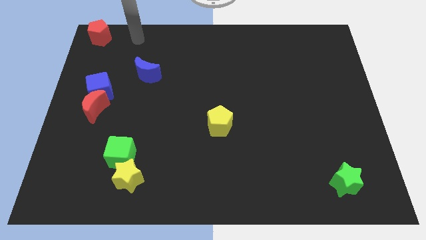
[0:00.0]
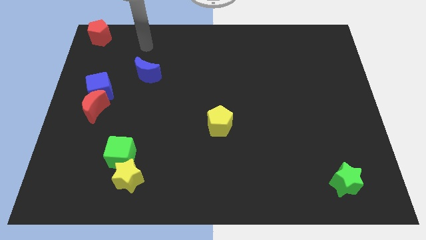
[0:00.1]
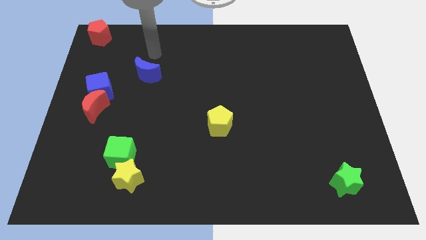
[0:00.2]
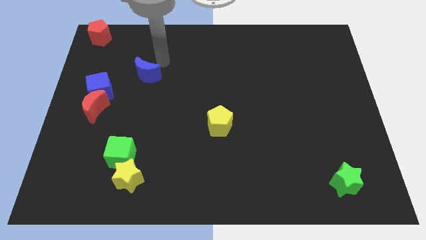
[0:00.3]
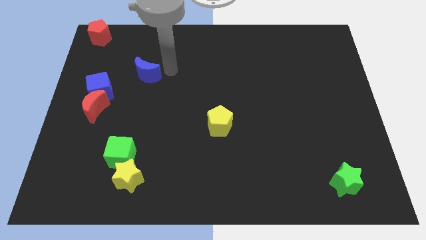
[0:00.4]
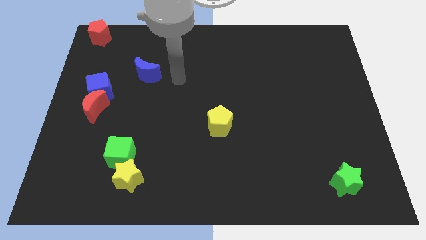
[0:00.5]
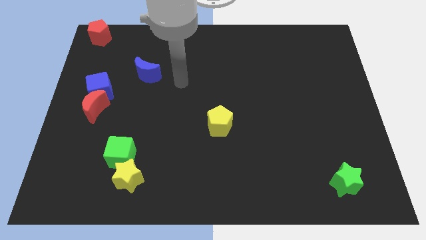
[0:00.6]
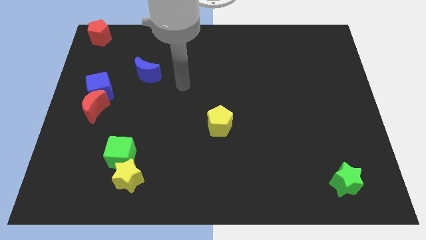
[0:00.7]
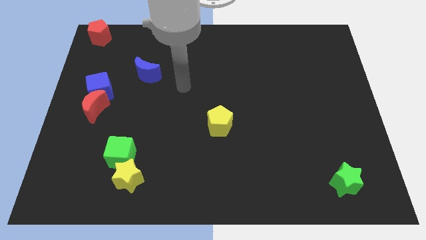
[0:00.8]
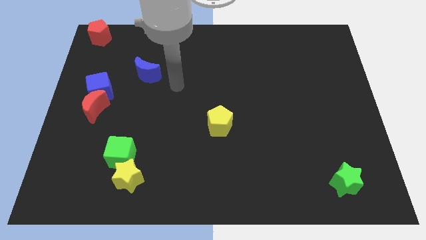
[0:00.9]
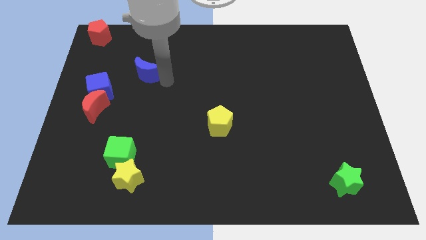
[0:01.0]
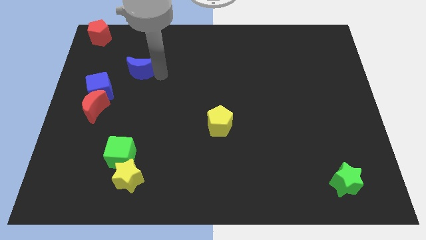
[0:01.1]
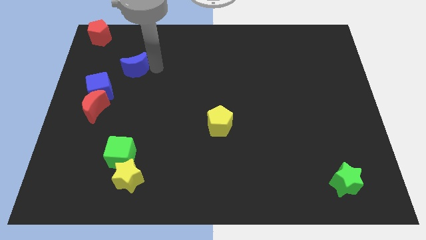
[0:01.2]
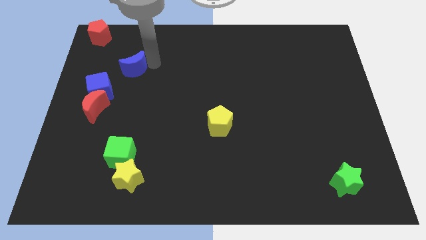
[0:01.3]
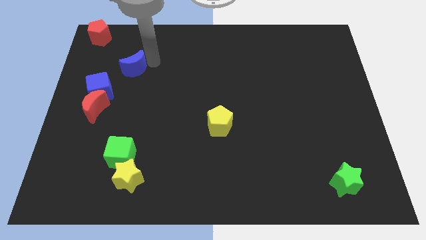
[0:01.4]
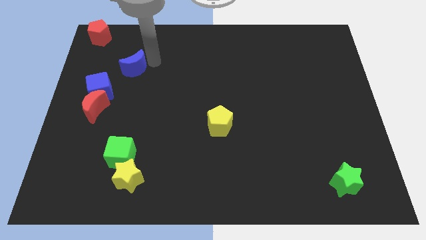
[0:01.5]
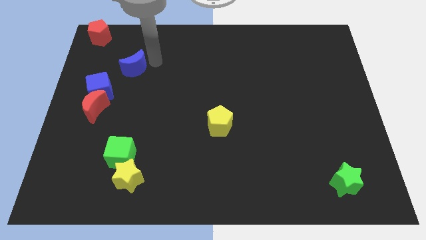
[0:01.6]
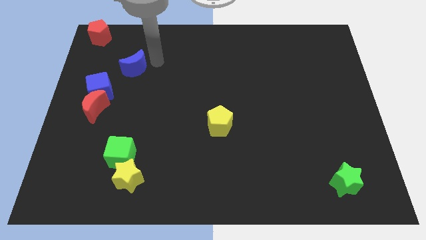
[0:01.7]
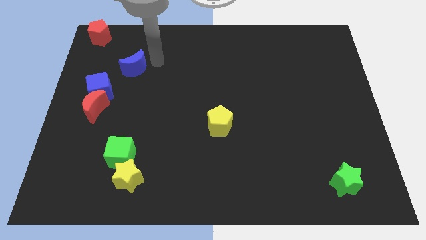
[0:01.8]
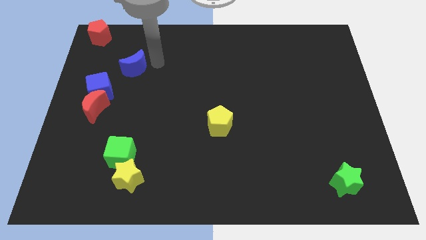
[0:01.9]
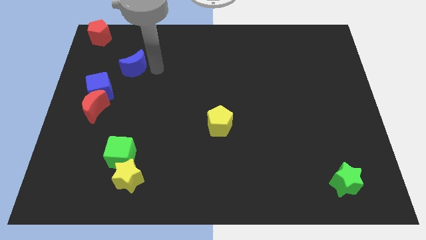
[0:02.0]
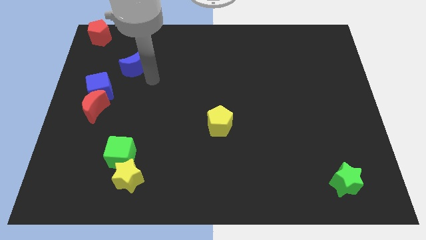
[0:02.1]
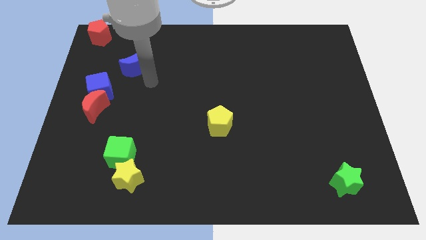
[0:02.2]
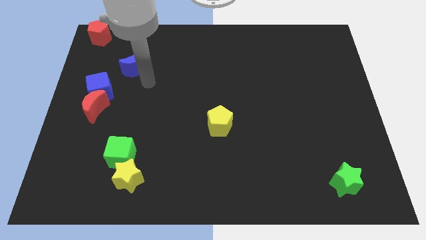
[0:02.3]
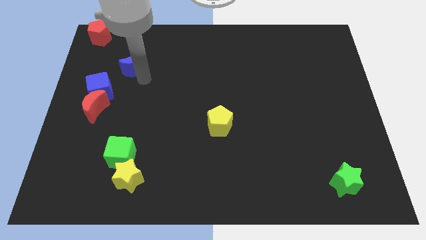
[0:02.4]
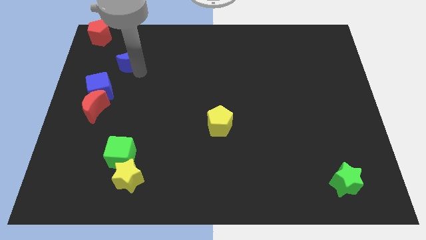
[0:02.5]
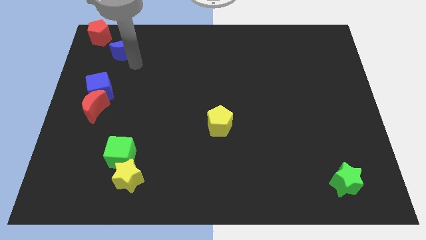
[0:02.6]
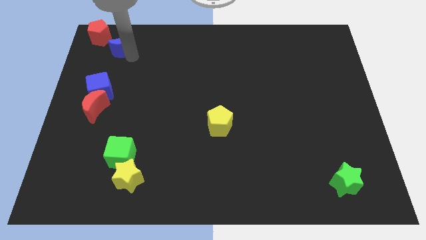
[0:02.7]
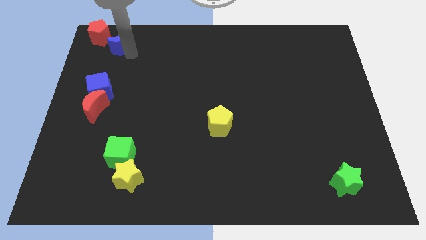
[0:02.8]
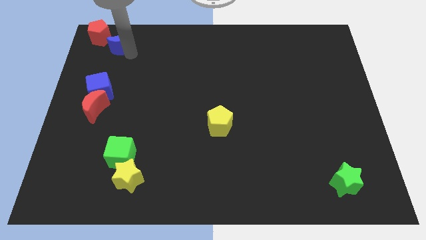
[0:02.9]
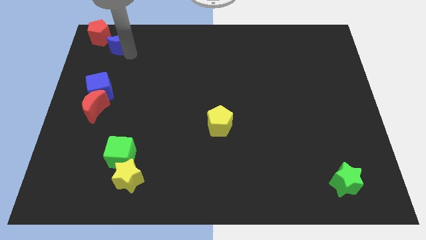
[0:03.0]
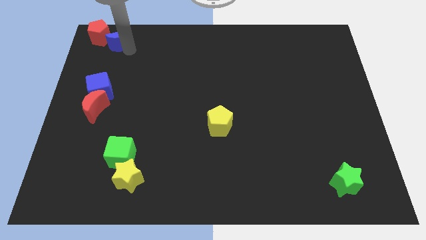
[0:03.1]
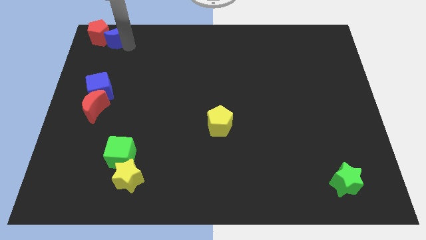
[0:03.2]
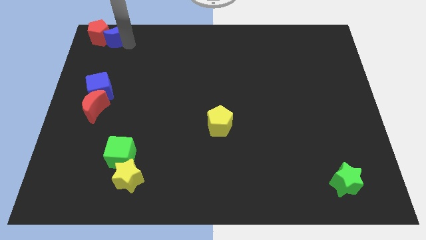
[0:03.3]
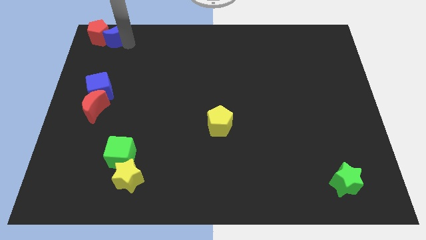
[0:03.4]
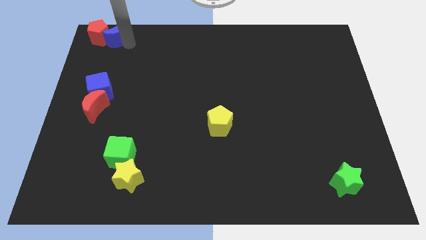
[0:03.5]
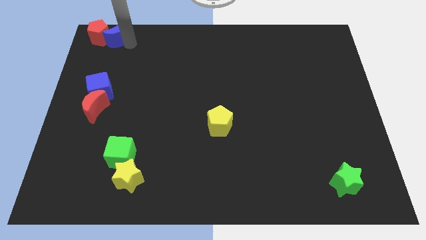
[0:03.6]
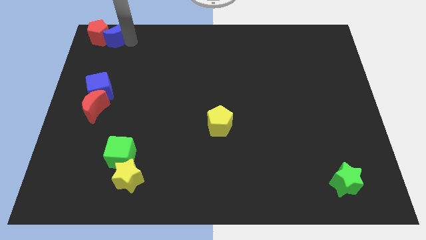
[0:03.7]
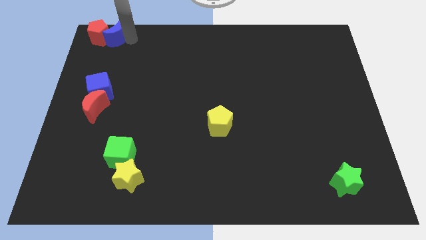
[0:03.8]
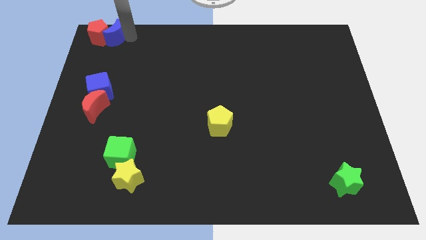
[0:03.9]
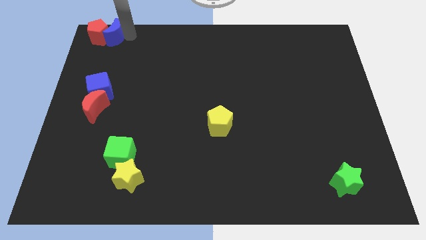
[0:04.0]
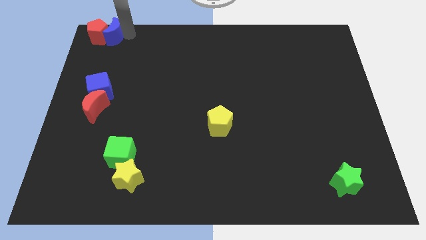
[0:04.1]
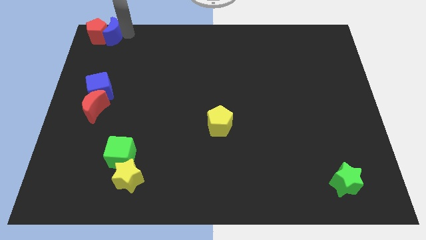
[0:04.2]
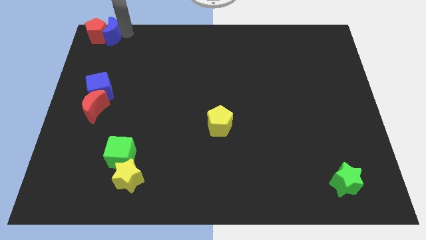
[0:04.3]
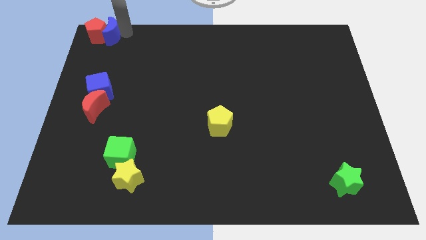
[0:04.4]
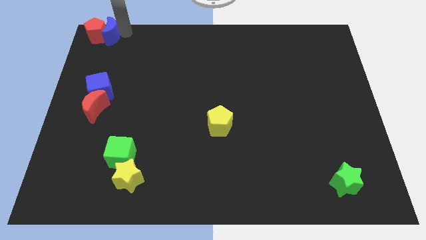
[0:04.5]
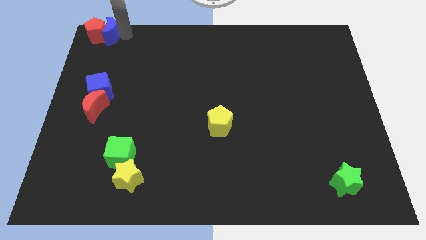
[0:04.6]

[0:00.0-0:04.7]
slide the blue moon into the right side of he red pentagon

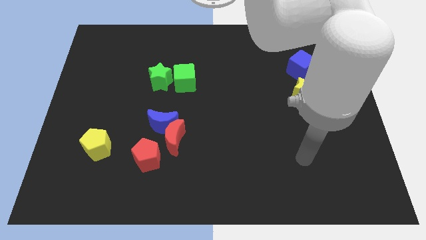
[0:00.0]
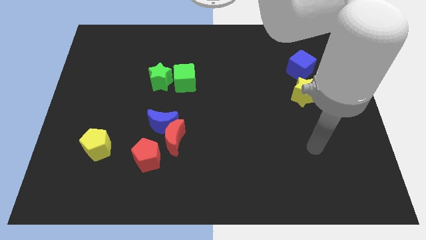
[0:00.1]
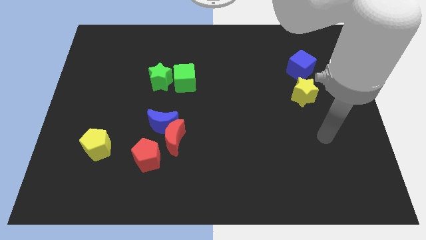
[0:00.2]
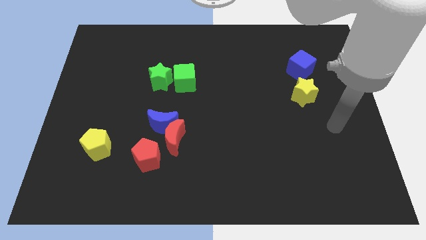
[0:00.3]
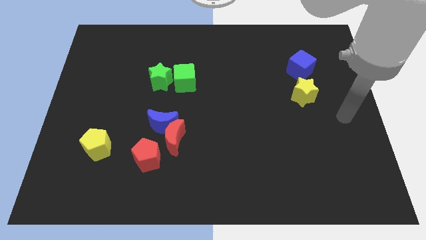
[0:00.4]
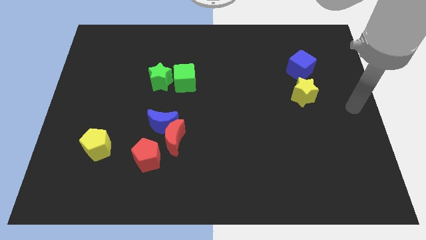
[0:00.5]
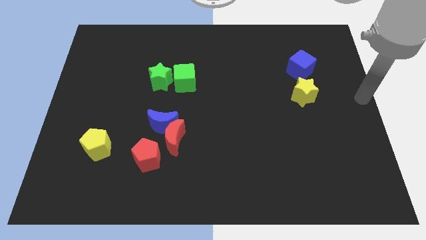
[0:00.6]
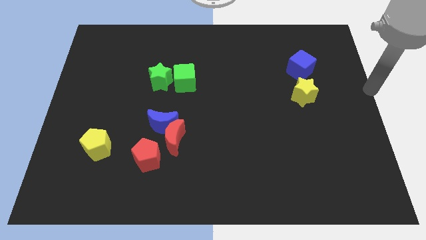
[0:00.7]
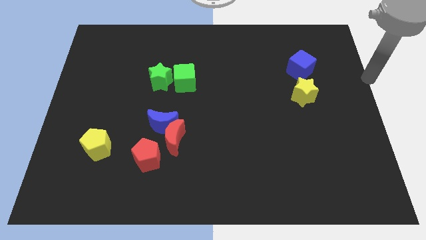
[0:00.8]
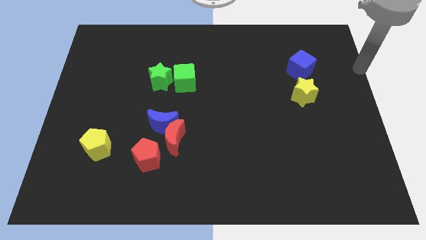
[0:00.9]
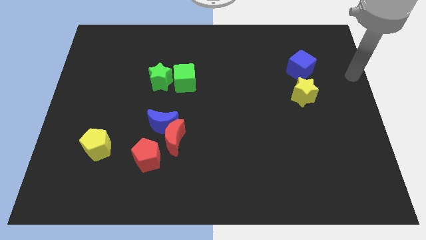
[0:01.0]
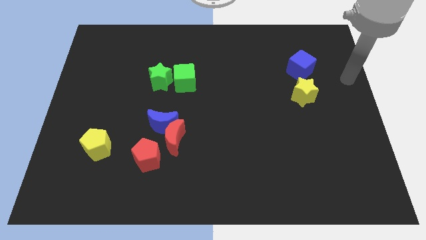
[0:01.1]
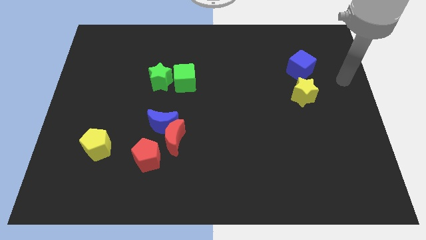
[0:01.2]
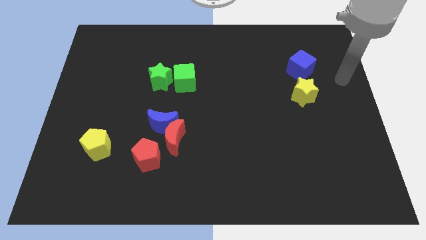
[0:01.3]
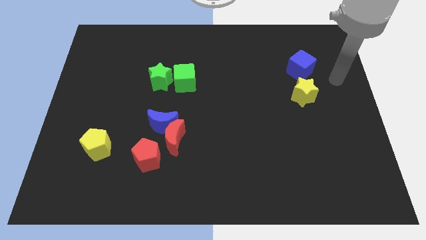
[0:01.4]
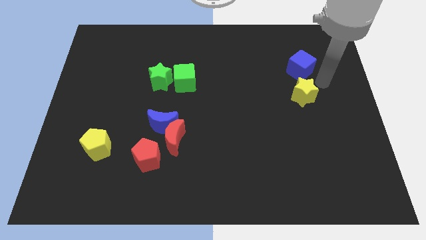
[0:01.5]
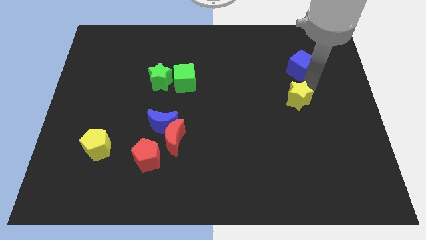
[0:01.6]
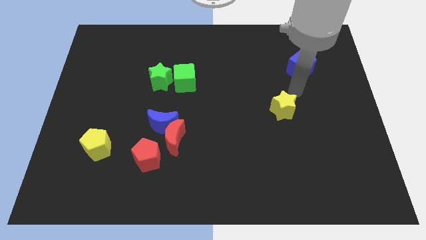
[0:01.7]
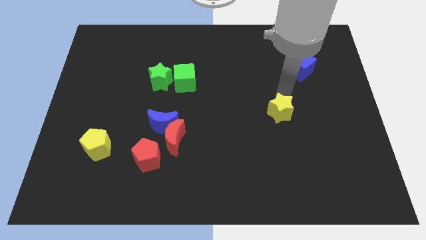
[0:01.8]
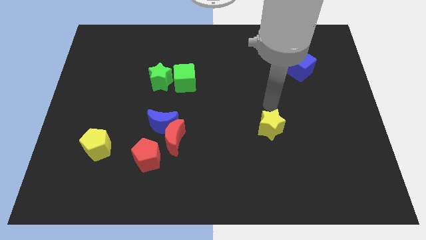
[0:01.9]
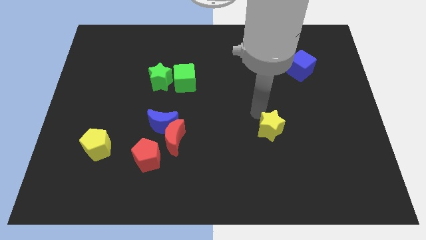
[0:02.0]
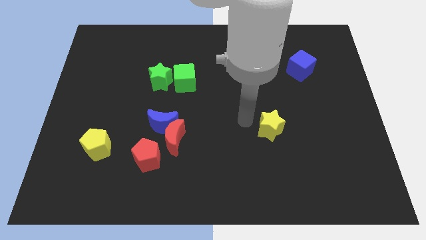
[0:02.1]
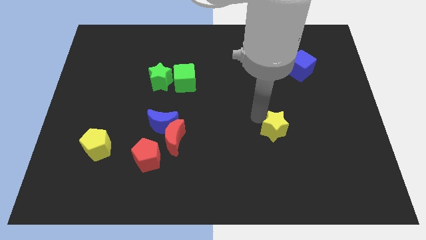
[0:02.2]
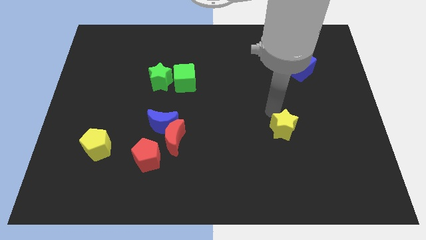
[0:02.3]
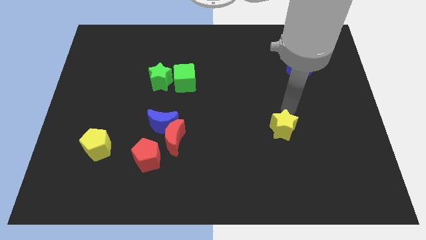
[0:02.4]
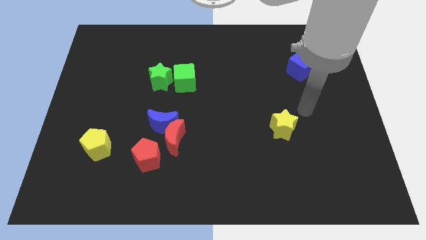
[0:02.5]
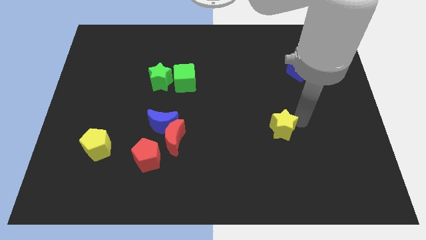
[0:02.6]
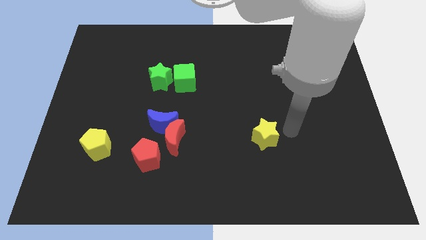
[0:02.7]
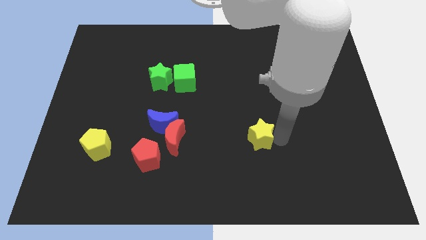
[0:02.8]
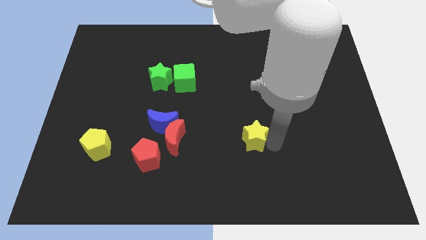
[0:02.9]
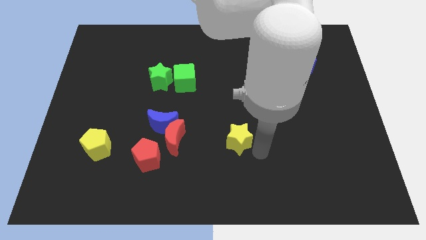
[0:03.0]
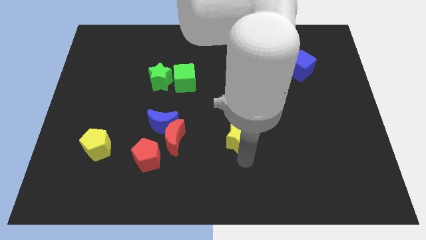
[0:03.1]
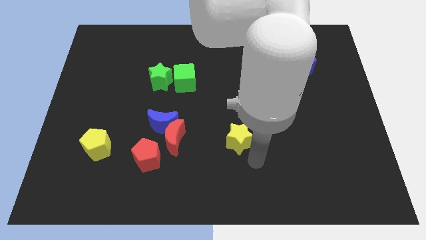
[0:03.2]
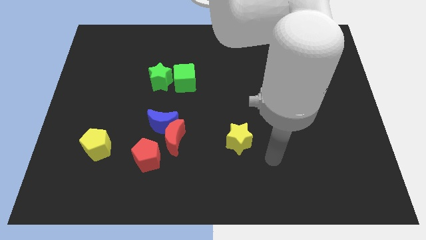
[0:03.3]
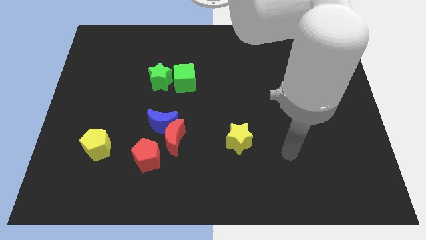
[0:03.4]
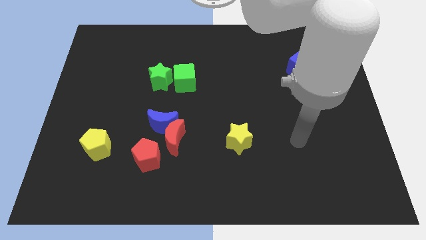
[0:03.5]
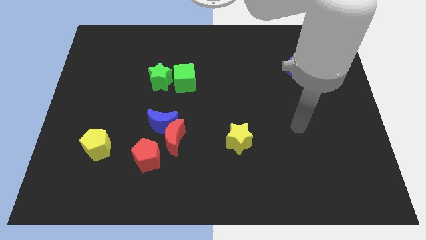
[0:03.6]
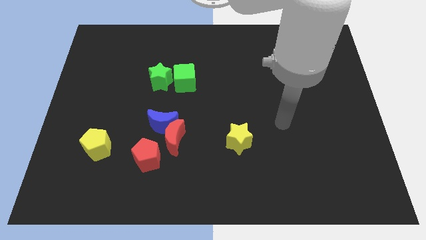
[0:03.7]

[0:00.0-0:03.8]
slide the yellow star parallel to red moon

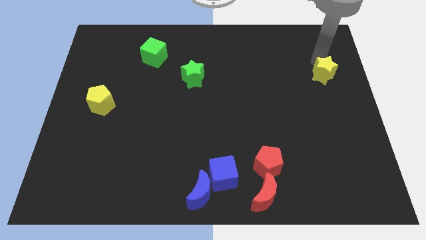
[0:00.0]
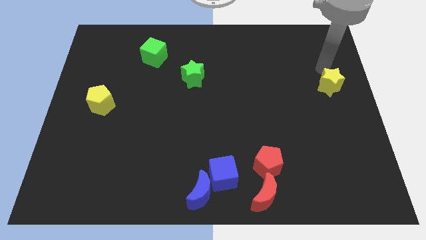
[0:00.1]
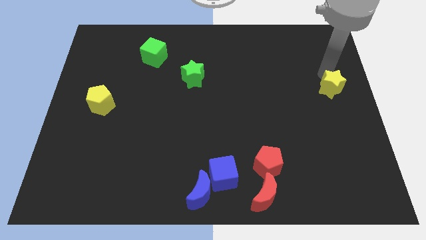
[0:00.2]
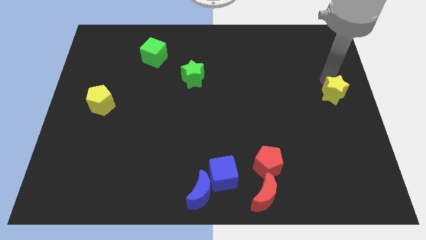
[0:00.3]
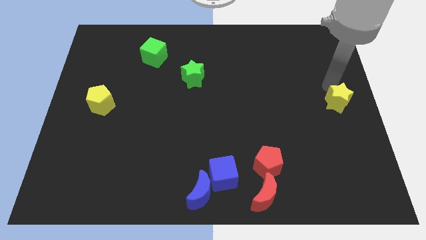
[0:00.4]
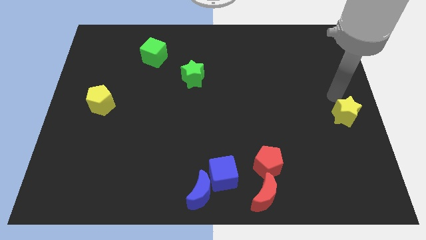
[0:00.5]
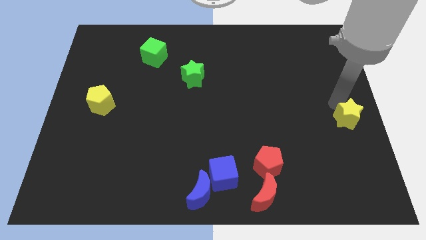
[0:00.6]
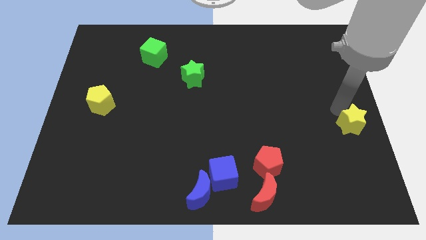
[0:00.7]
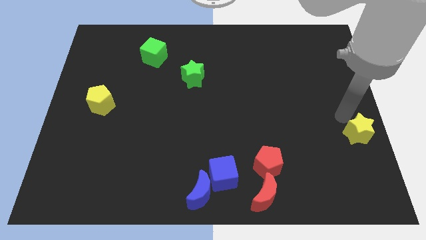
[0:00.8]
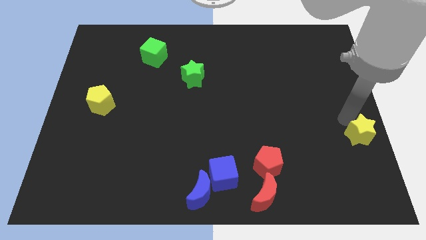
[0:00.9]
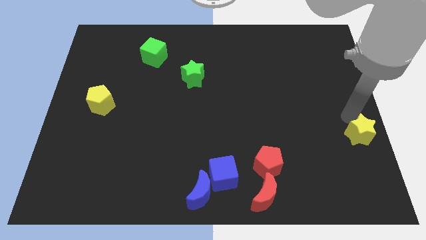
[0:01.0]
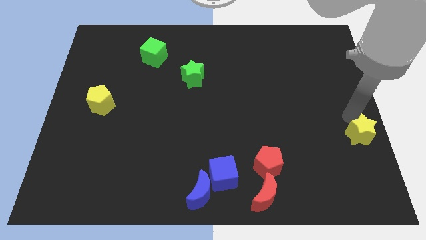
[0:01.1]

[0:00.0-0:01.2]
move the yellow star to the bottom of the board
